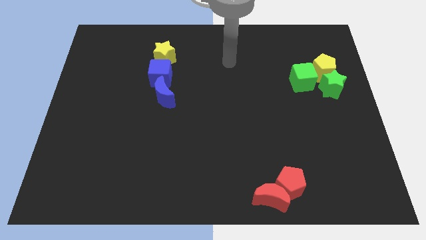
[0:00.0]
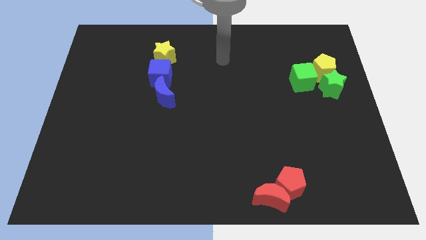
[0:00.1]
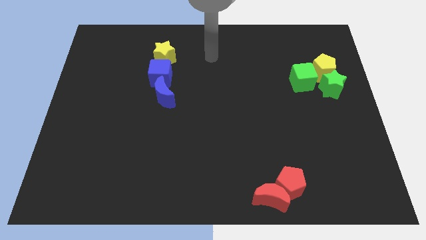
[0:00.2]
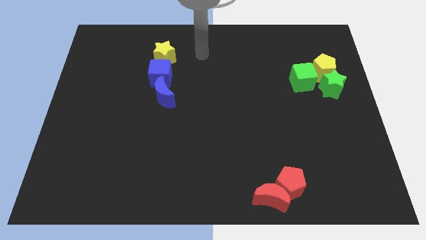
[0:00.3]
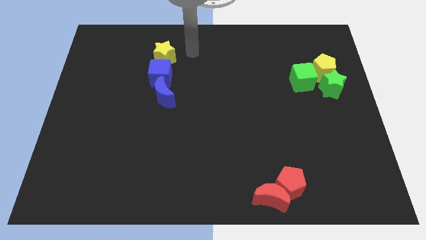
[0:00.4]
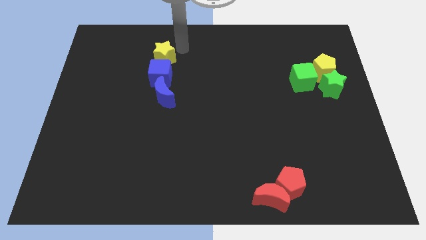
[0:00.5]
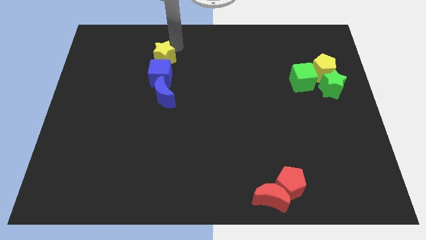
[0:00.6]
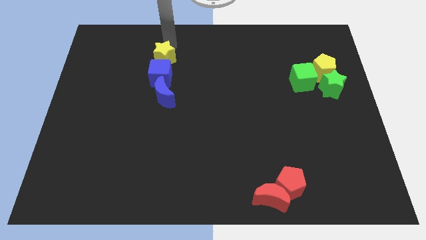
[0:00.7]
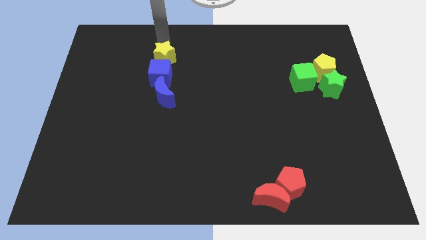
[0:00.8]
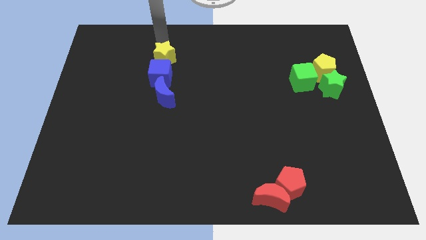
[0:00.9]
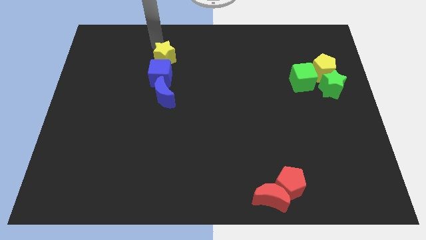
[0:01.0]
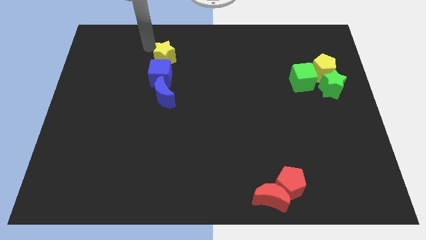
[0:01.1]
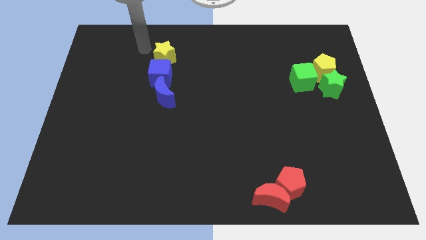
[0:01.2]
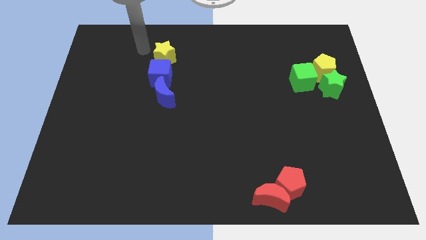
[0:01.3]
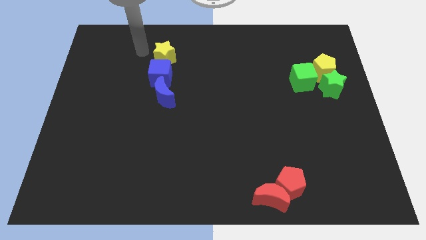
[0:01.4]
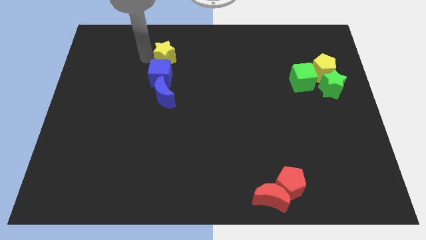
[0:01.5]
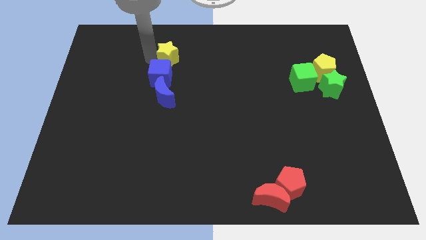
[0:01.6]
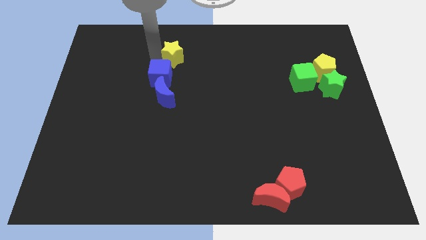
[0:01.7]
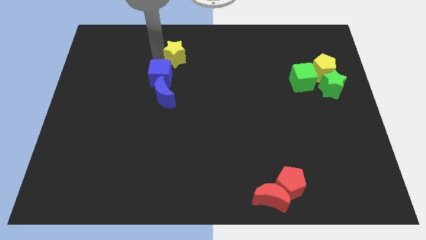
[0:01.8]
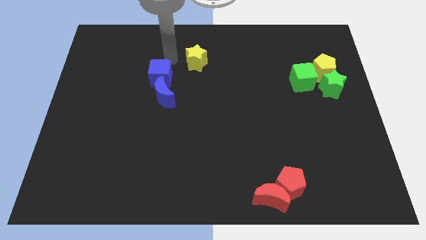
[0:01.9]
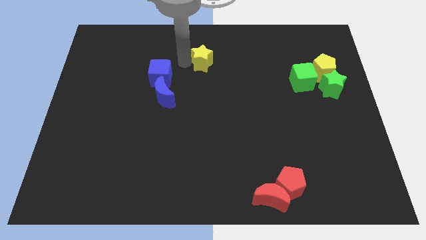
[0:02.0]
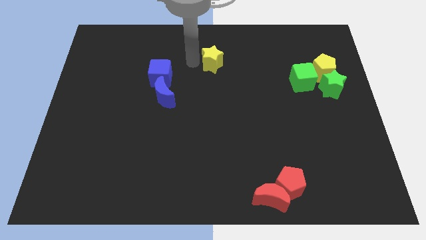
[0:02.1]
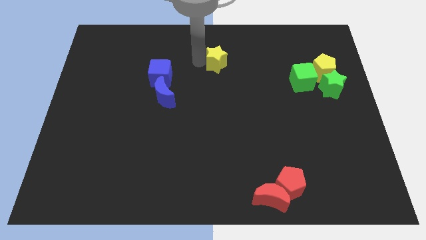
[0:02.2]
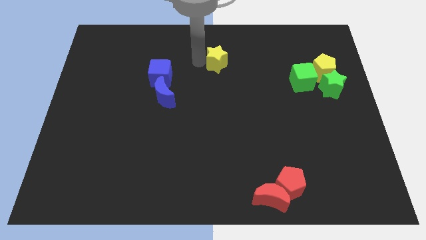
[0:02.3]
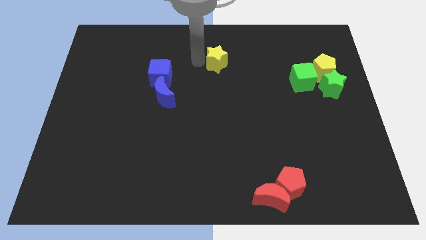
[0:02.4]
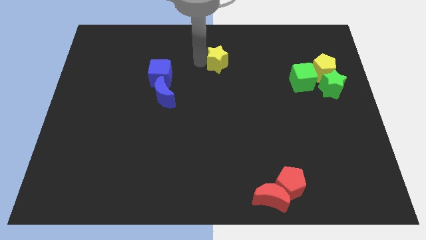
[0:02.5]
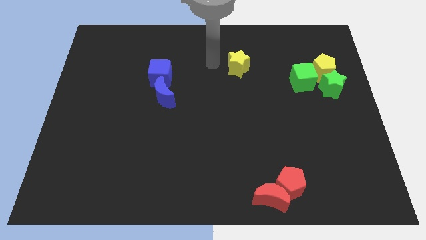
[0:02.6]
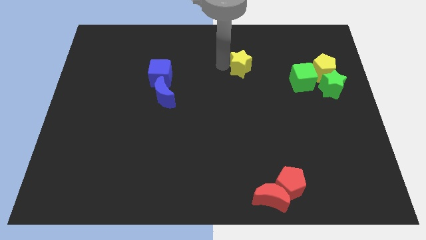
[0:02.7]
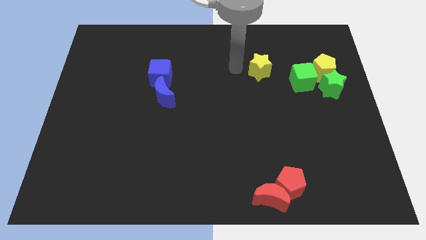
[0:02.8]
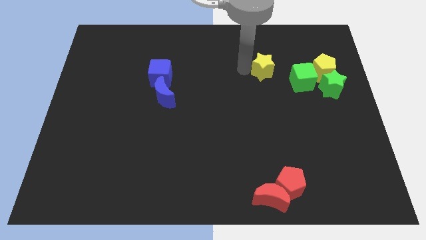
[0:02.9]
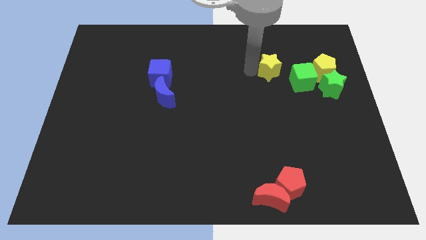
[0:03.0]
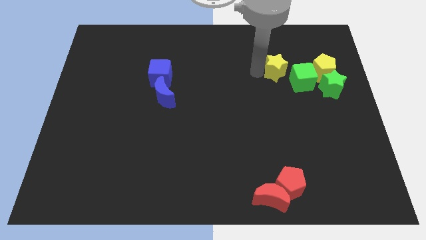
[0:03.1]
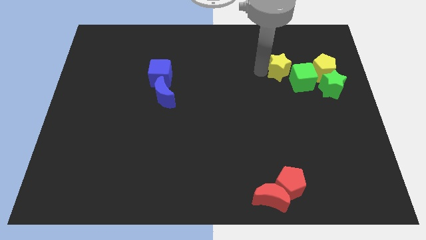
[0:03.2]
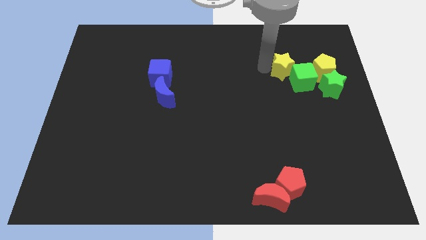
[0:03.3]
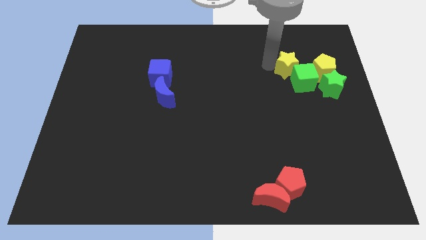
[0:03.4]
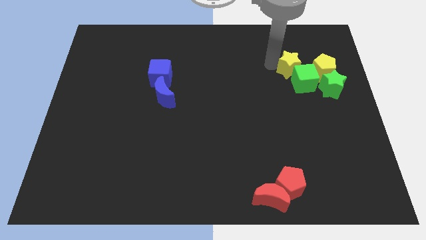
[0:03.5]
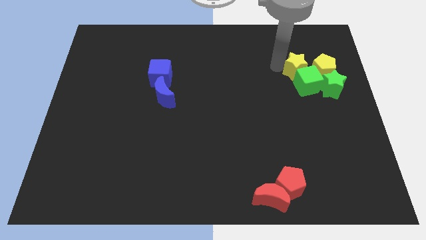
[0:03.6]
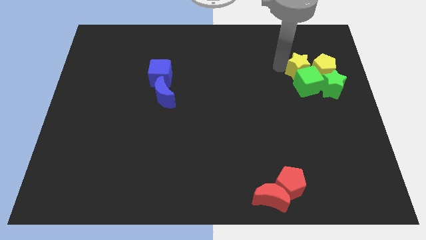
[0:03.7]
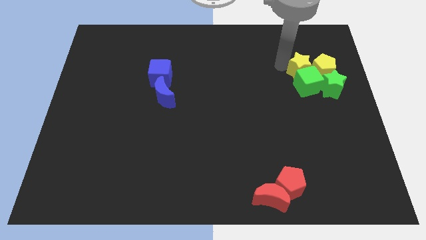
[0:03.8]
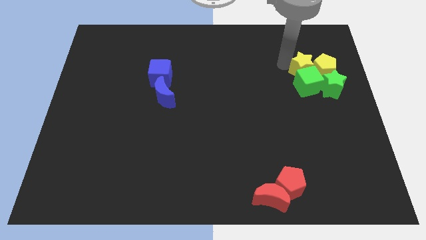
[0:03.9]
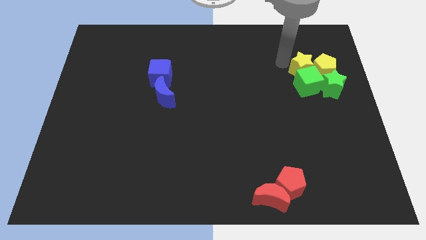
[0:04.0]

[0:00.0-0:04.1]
place yellow star to the left of yellow pentagon

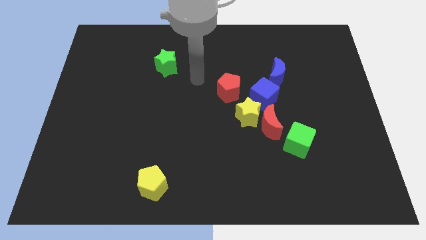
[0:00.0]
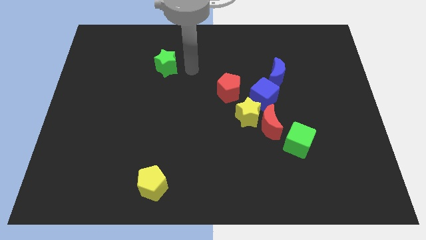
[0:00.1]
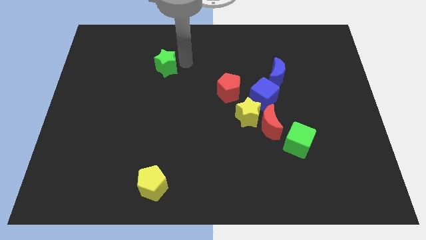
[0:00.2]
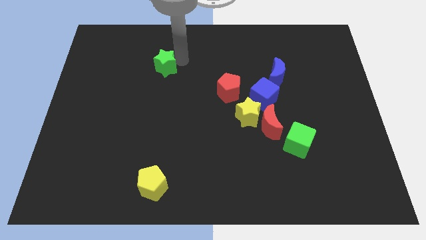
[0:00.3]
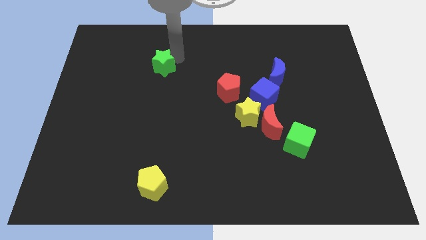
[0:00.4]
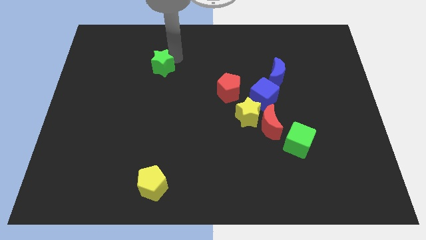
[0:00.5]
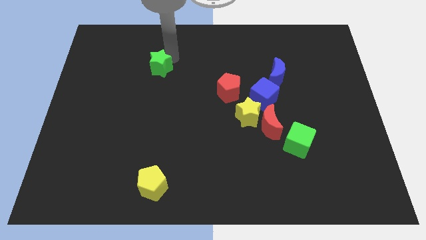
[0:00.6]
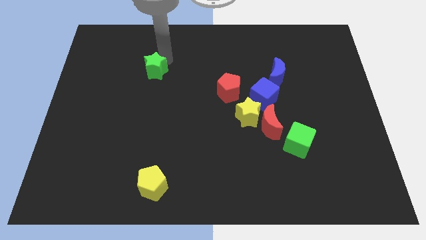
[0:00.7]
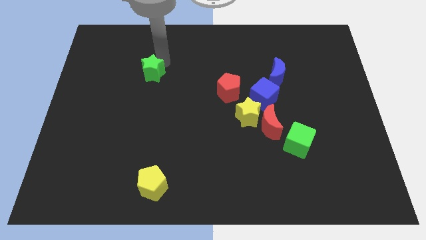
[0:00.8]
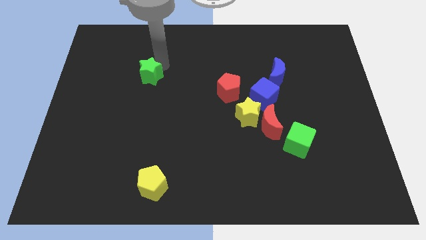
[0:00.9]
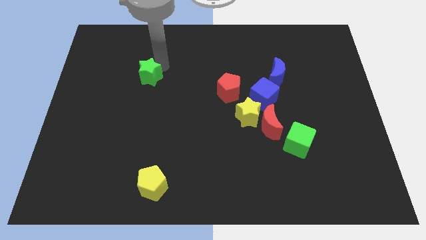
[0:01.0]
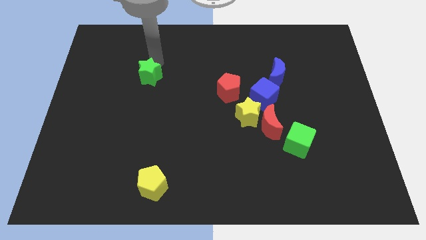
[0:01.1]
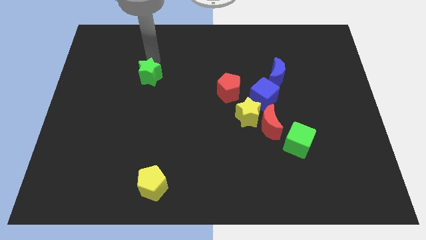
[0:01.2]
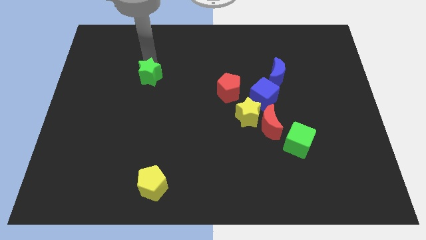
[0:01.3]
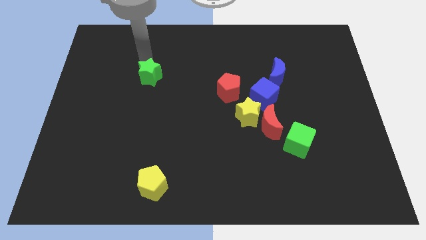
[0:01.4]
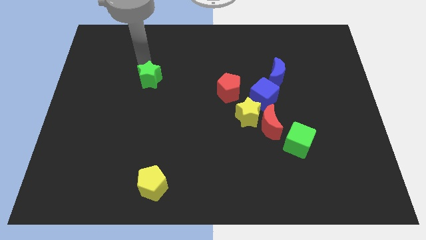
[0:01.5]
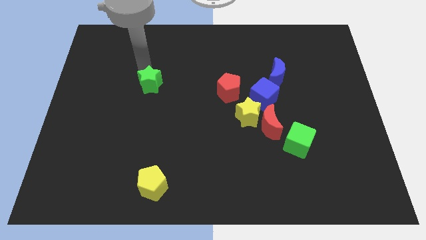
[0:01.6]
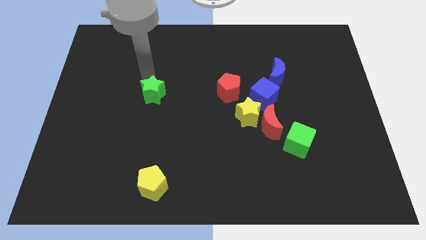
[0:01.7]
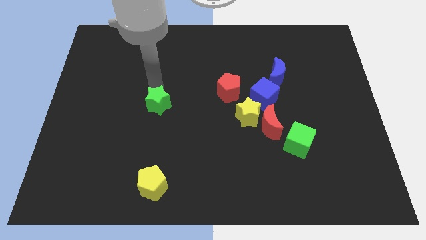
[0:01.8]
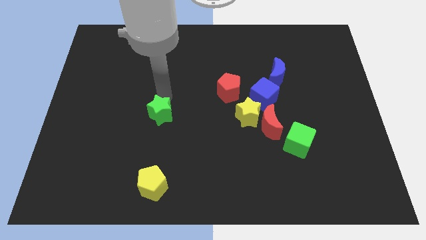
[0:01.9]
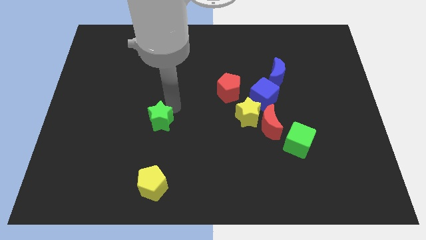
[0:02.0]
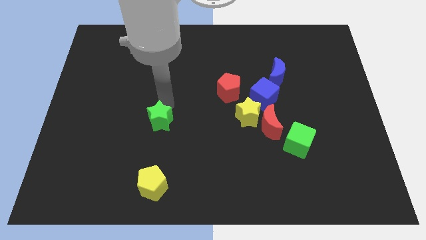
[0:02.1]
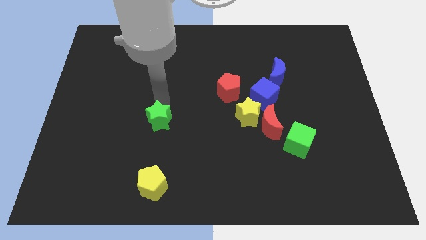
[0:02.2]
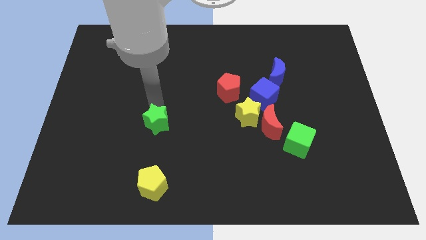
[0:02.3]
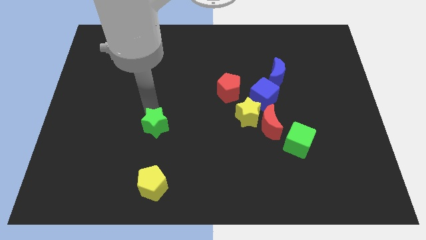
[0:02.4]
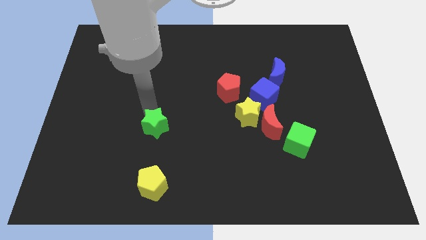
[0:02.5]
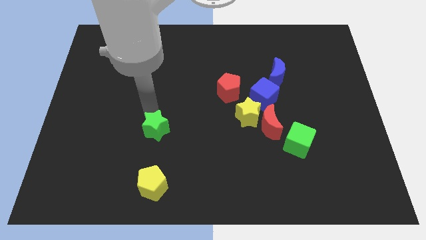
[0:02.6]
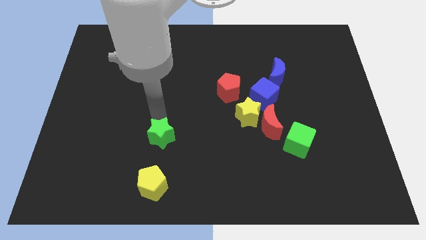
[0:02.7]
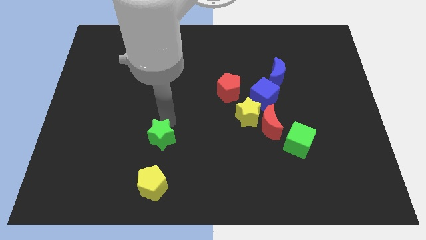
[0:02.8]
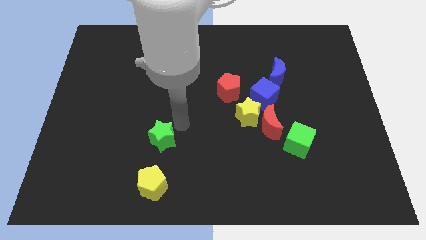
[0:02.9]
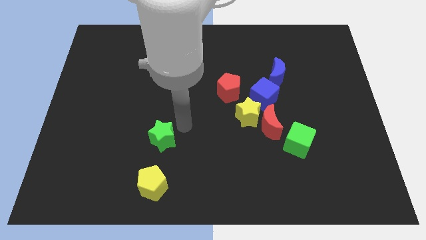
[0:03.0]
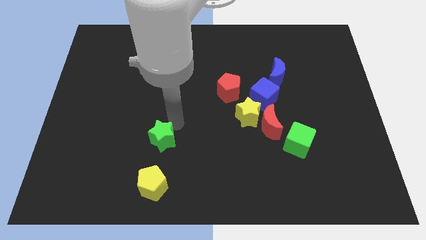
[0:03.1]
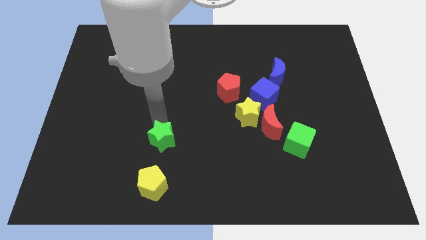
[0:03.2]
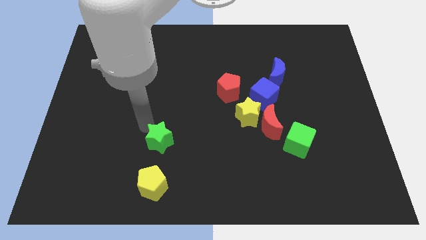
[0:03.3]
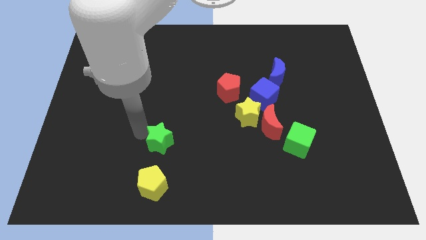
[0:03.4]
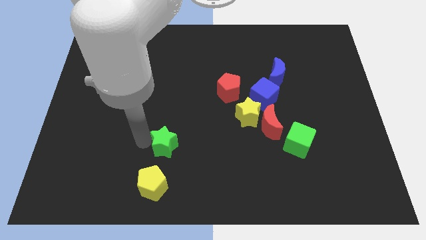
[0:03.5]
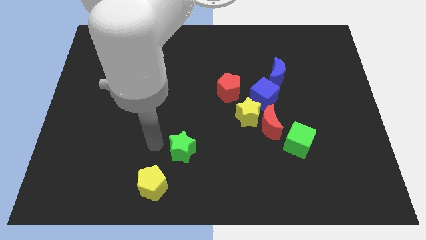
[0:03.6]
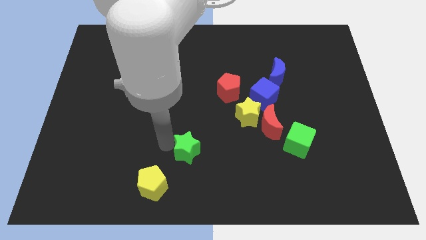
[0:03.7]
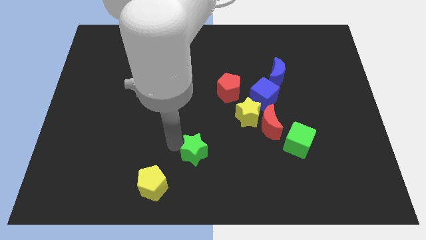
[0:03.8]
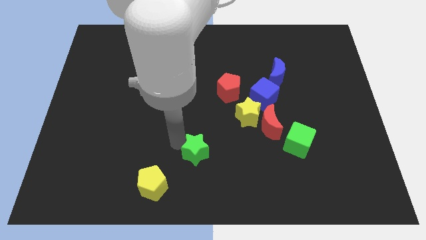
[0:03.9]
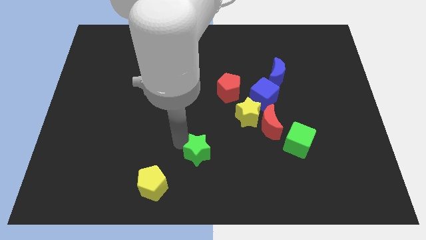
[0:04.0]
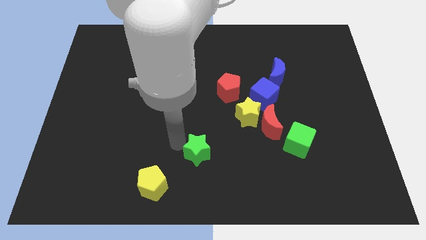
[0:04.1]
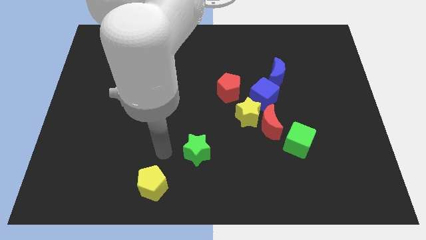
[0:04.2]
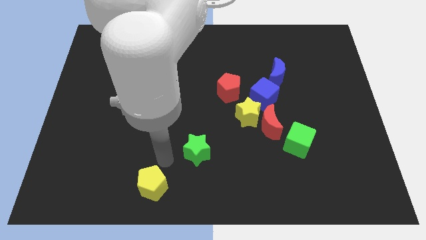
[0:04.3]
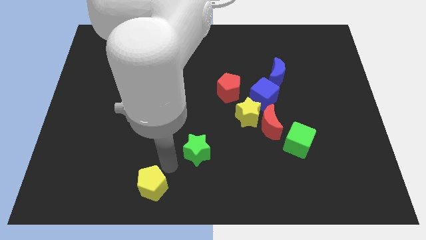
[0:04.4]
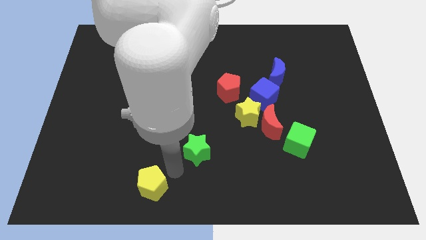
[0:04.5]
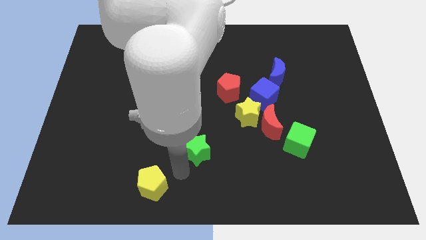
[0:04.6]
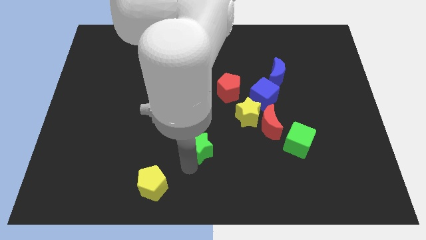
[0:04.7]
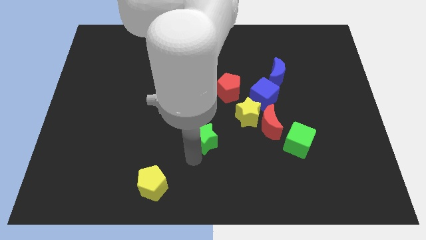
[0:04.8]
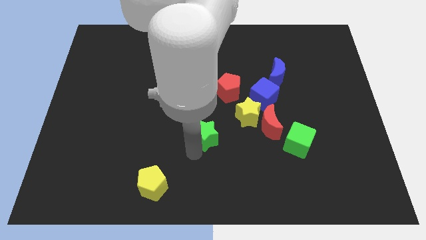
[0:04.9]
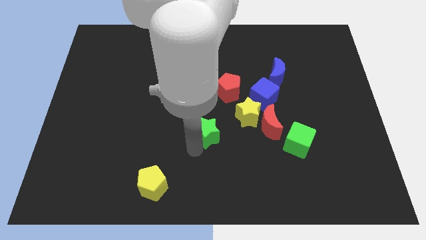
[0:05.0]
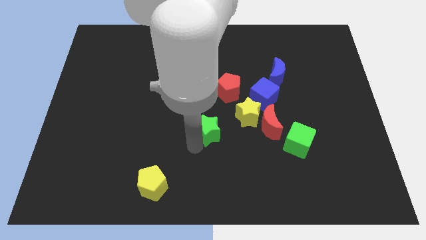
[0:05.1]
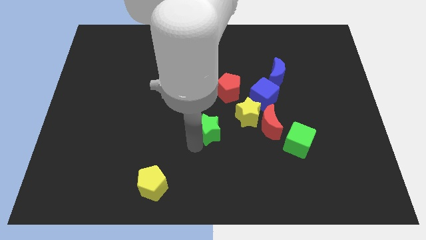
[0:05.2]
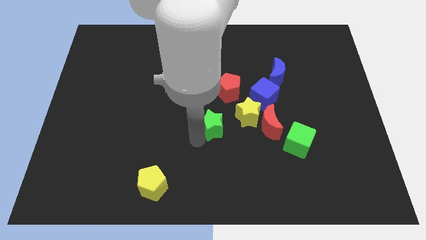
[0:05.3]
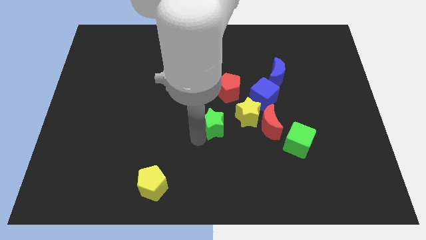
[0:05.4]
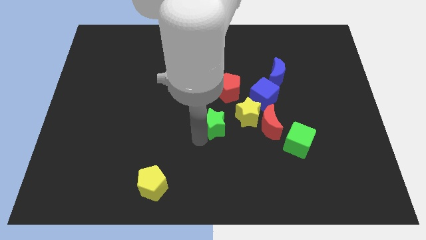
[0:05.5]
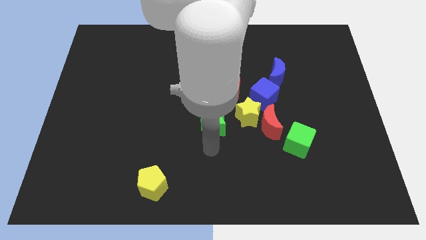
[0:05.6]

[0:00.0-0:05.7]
push green star towards the yellow star
